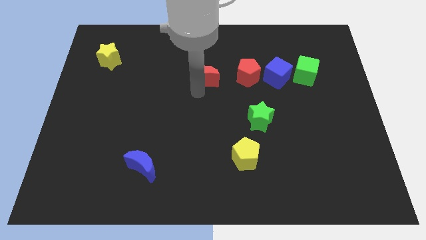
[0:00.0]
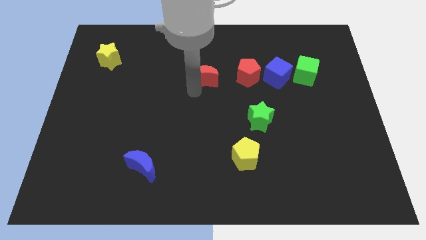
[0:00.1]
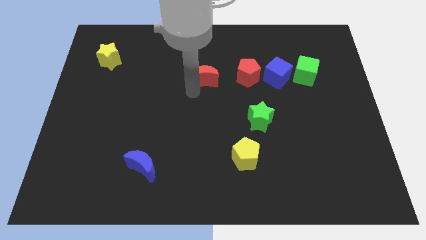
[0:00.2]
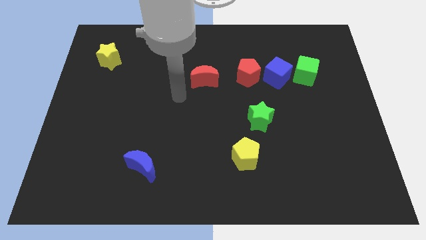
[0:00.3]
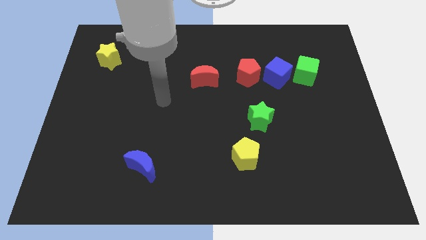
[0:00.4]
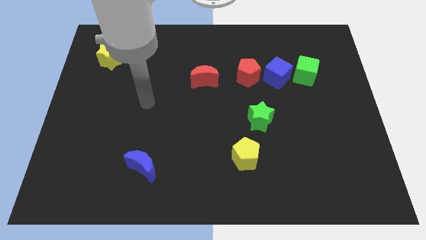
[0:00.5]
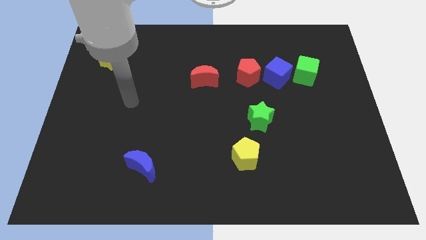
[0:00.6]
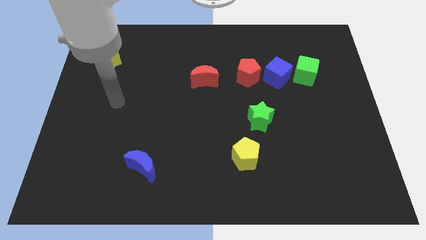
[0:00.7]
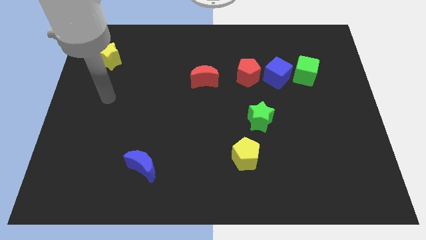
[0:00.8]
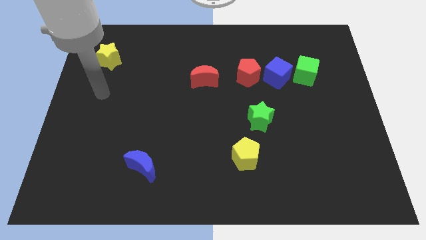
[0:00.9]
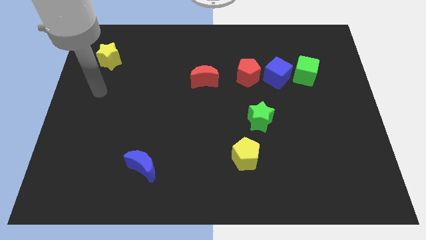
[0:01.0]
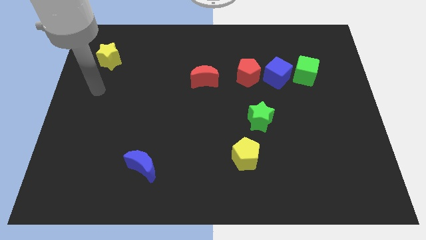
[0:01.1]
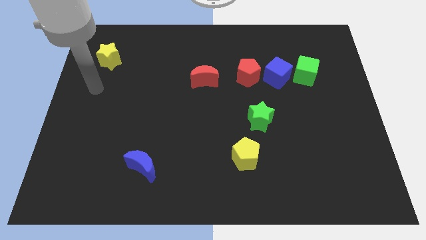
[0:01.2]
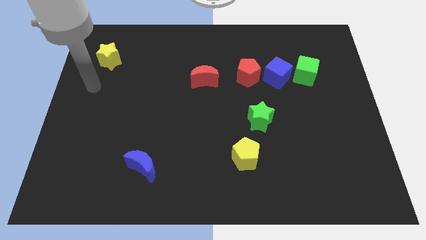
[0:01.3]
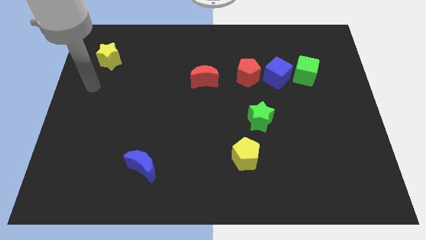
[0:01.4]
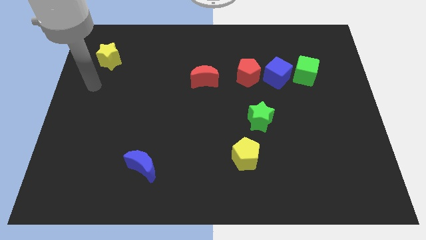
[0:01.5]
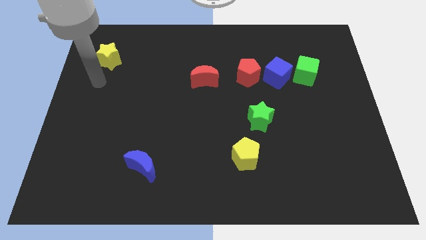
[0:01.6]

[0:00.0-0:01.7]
move your arm towards the yellow star

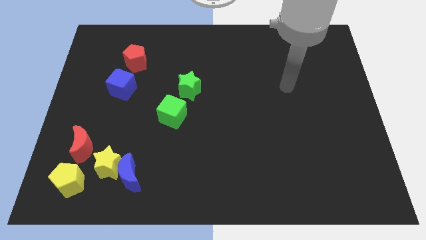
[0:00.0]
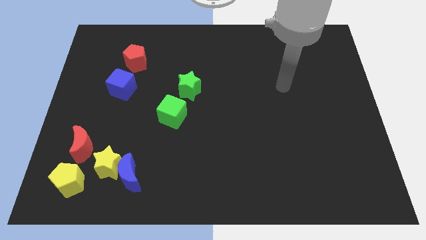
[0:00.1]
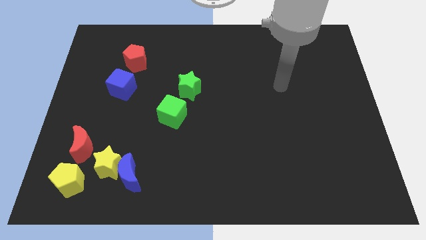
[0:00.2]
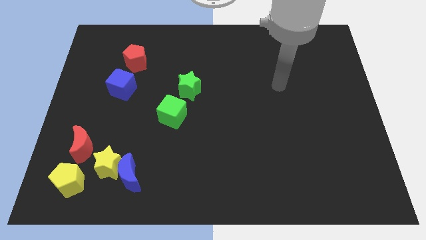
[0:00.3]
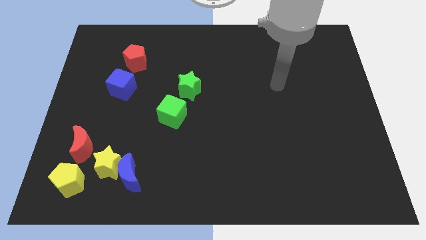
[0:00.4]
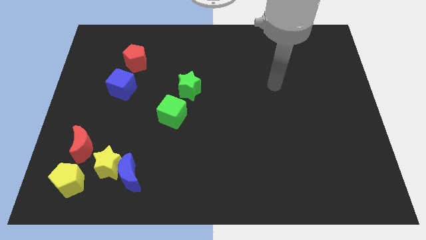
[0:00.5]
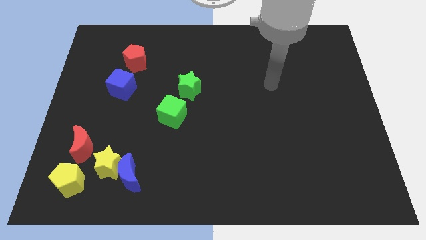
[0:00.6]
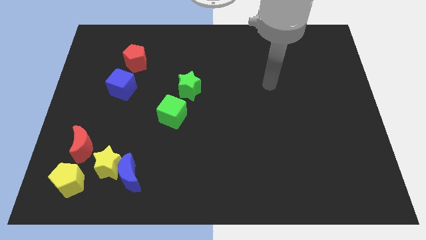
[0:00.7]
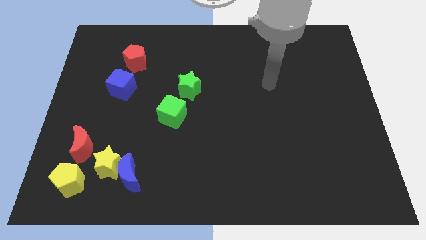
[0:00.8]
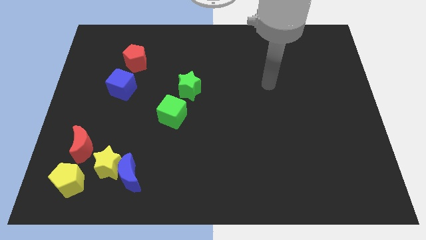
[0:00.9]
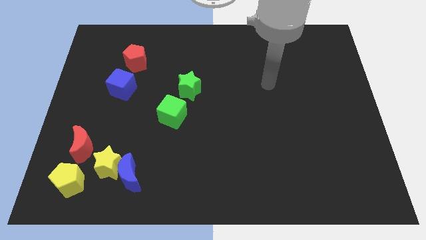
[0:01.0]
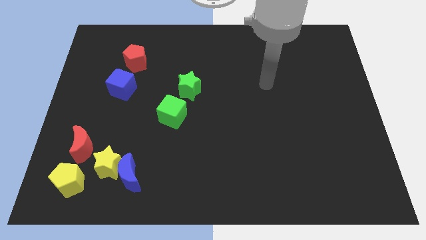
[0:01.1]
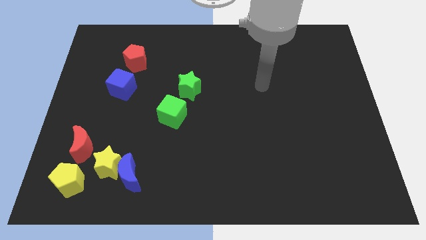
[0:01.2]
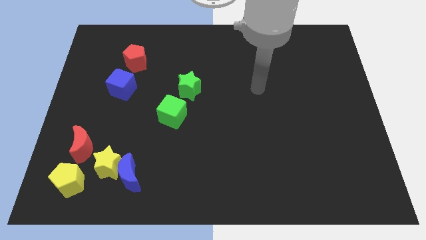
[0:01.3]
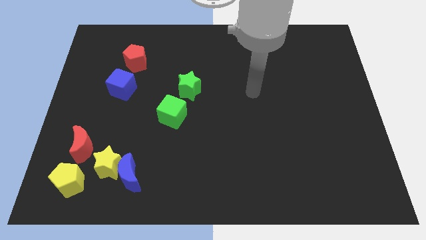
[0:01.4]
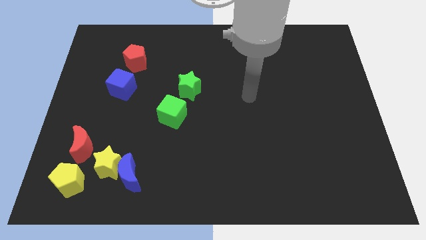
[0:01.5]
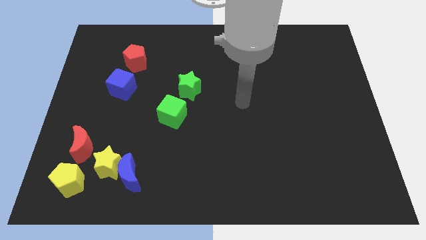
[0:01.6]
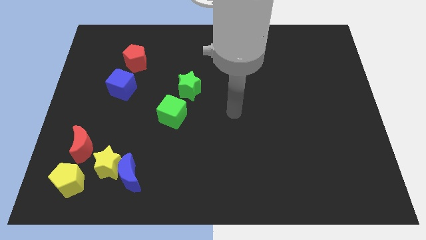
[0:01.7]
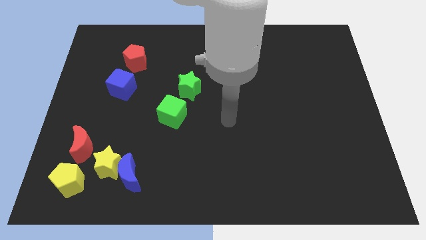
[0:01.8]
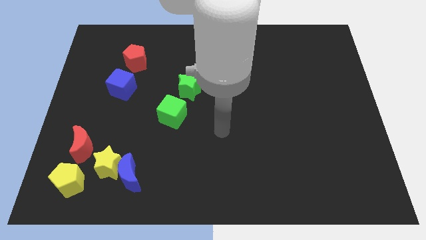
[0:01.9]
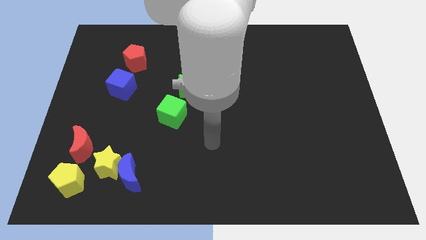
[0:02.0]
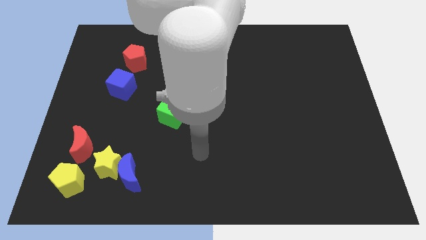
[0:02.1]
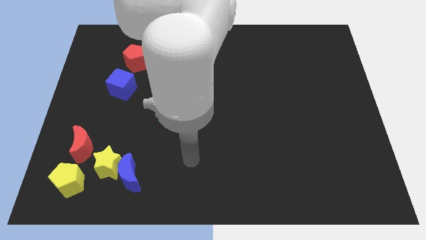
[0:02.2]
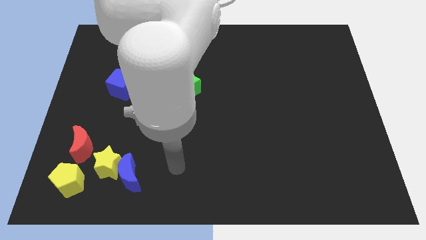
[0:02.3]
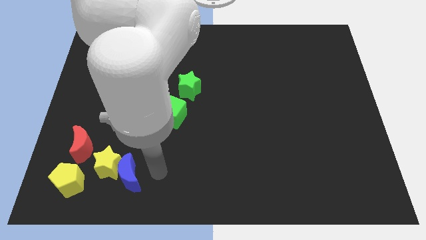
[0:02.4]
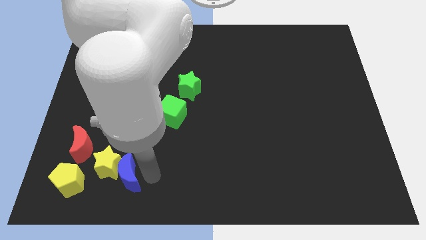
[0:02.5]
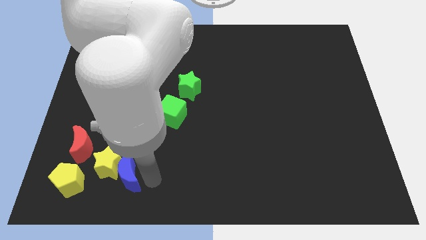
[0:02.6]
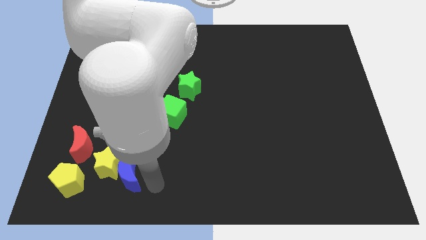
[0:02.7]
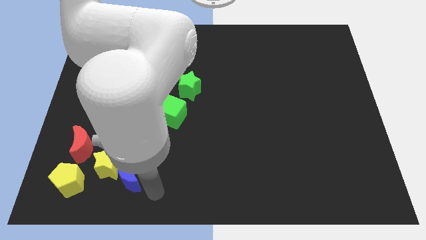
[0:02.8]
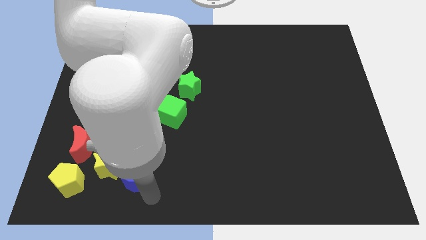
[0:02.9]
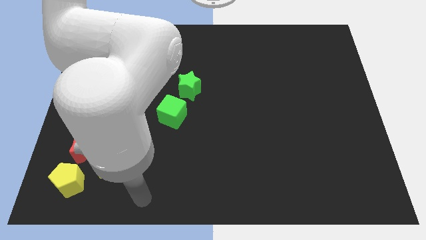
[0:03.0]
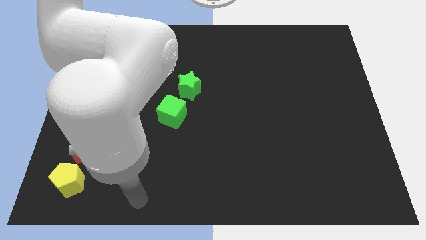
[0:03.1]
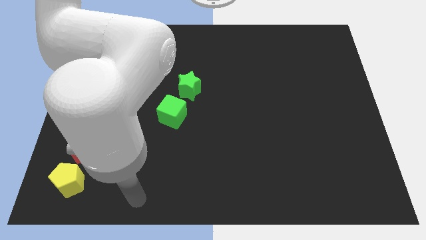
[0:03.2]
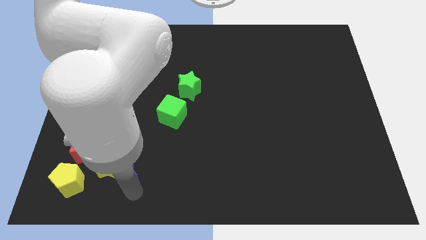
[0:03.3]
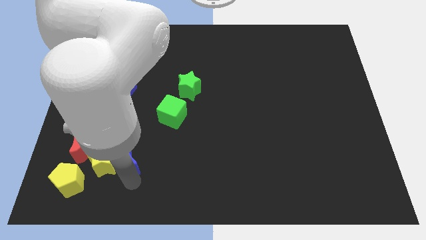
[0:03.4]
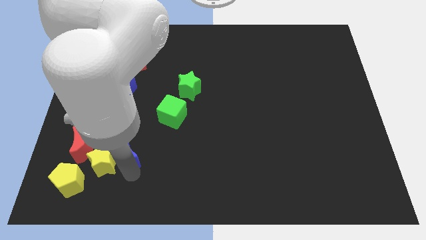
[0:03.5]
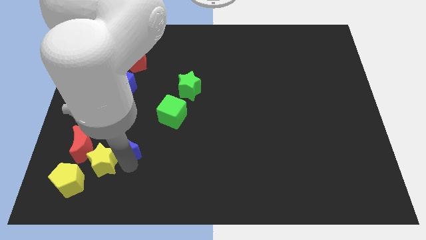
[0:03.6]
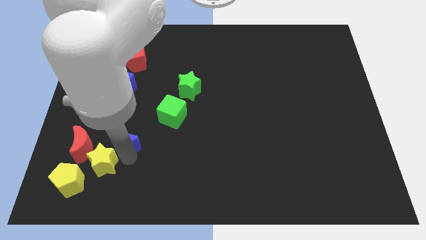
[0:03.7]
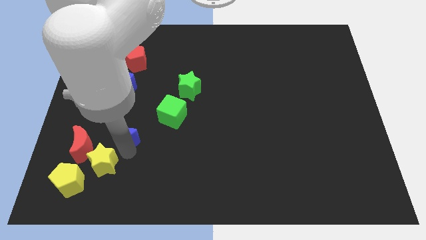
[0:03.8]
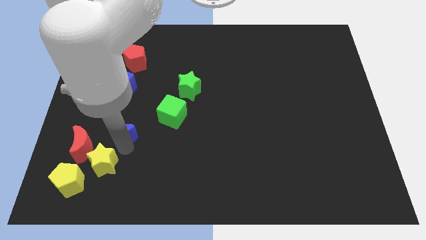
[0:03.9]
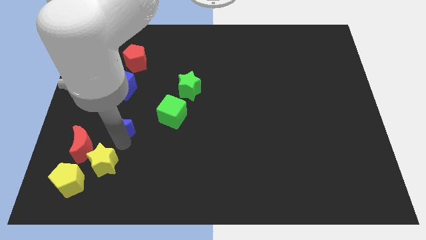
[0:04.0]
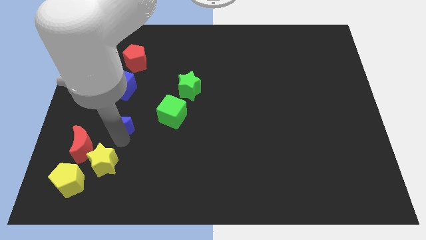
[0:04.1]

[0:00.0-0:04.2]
move the blue crescent above the yellow star

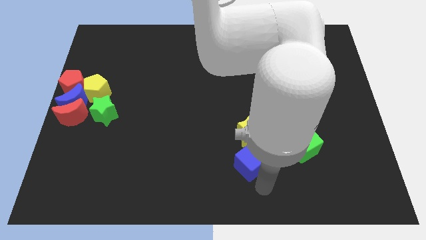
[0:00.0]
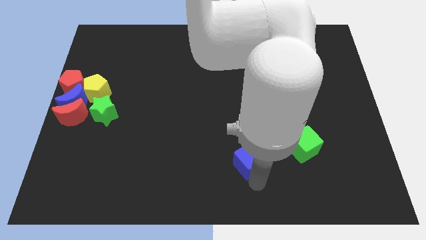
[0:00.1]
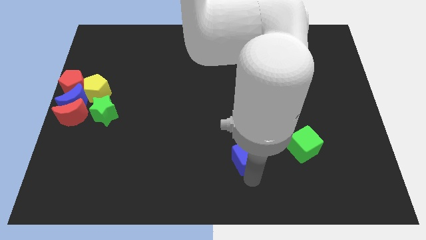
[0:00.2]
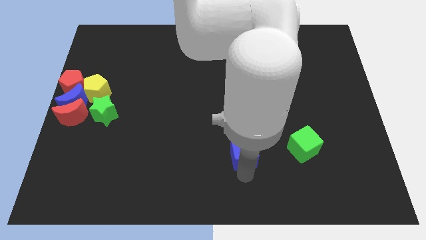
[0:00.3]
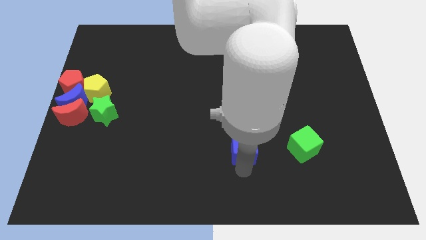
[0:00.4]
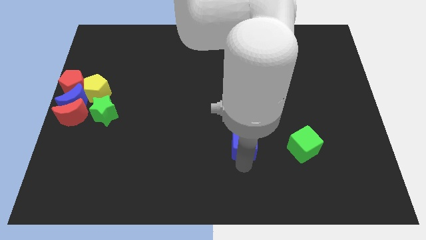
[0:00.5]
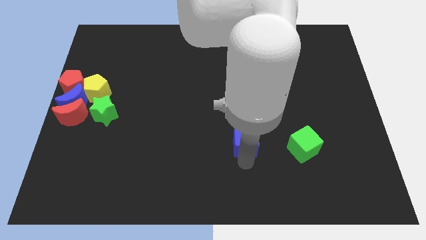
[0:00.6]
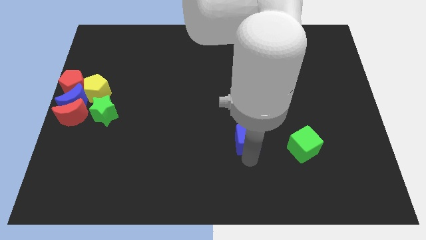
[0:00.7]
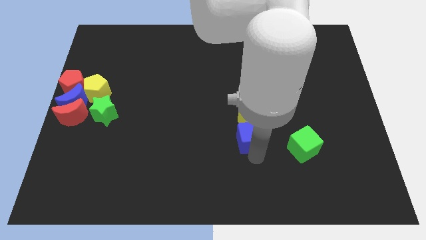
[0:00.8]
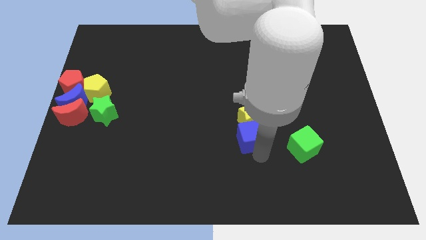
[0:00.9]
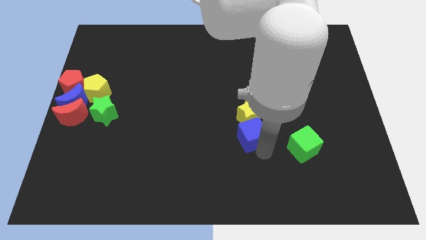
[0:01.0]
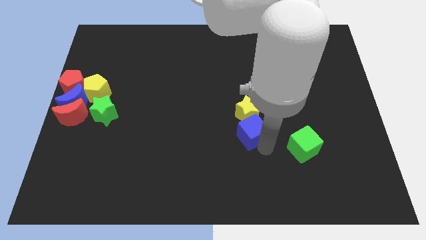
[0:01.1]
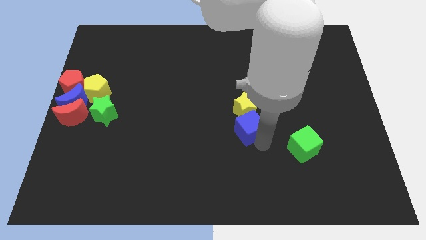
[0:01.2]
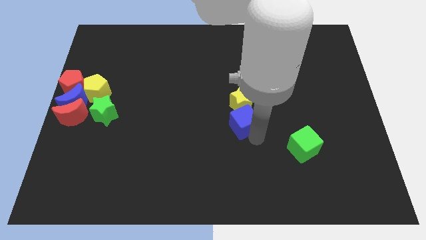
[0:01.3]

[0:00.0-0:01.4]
push the blue cube into the yellow star

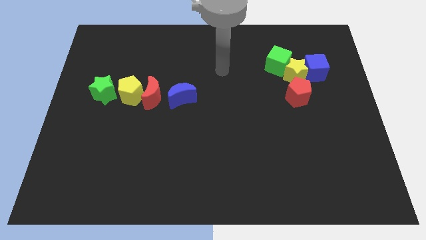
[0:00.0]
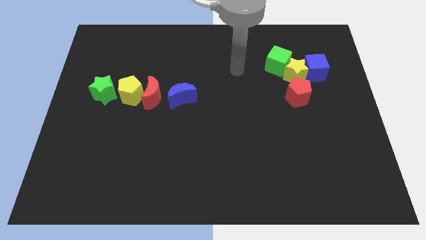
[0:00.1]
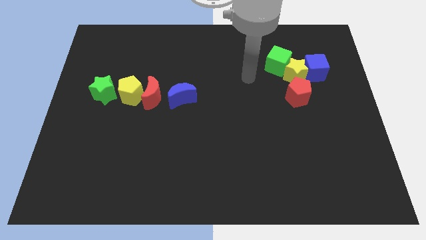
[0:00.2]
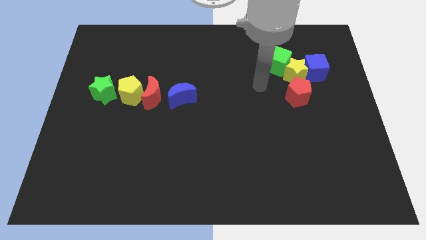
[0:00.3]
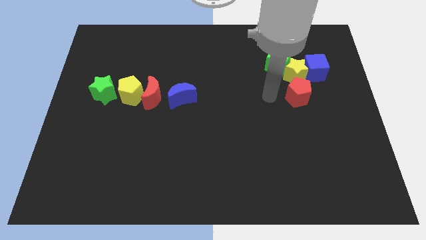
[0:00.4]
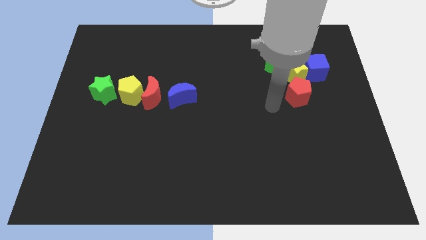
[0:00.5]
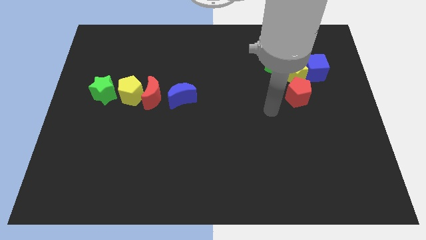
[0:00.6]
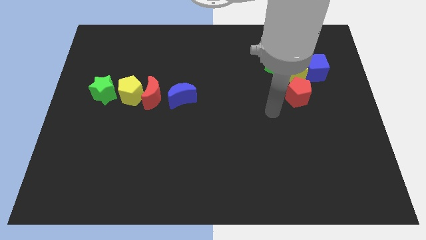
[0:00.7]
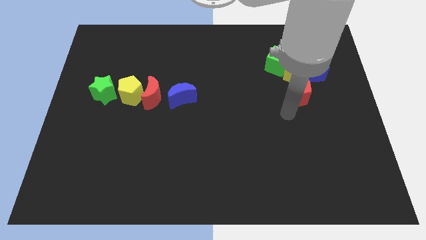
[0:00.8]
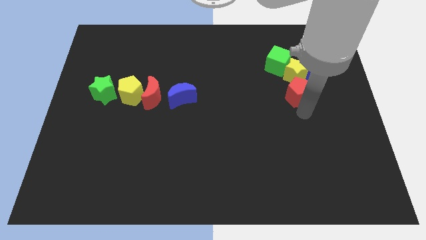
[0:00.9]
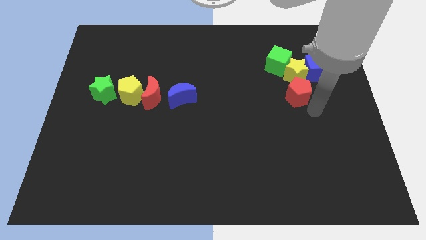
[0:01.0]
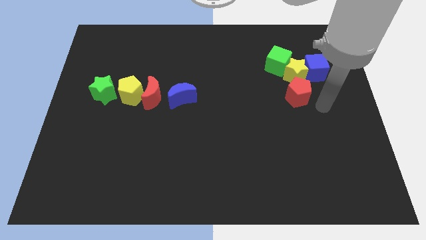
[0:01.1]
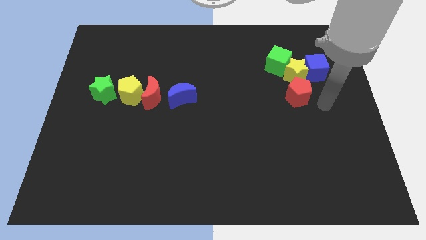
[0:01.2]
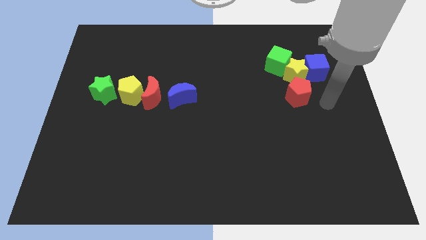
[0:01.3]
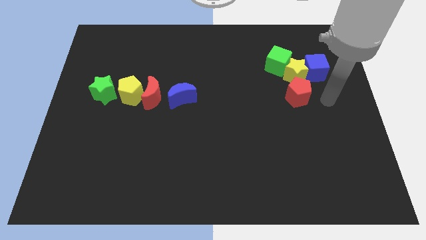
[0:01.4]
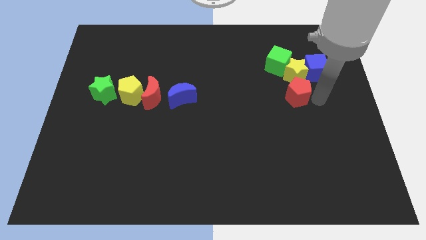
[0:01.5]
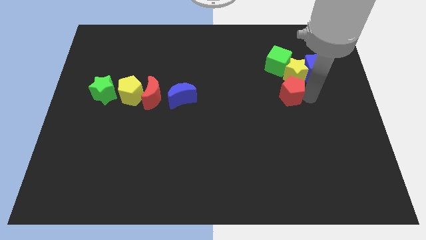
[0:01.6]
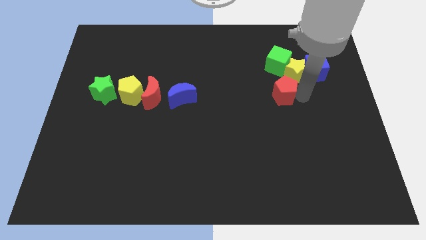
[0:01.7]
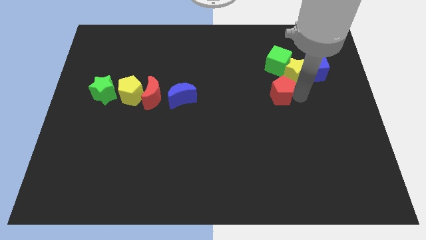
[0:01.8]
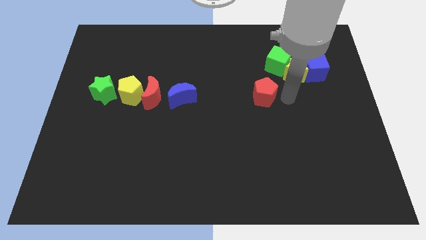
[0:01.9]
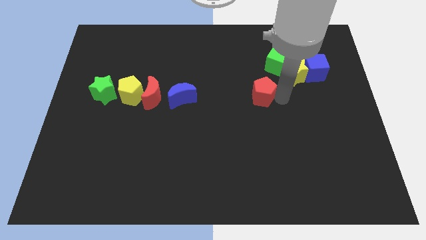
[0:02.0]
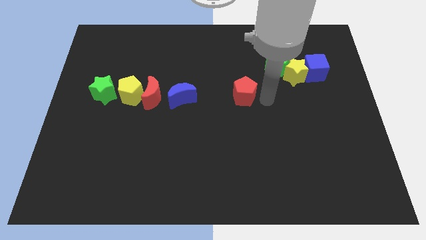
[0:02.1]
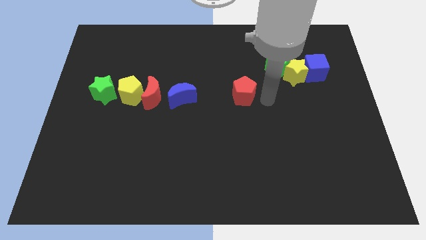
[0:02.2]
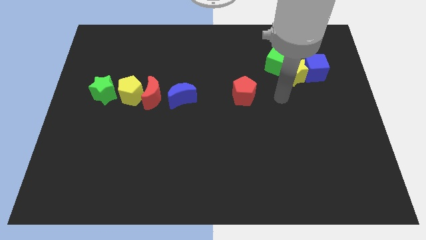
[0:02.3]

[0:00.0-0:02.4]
move the red pentagon away from the yellow star
